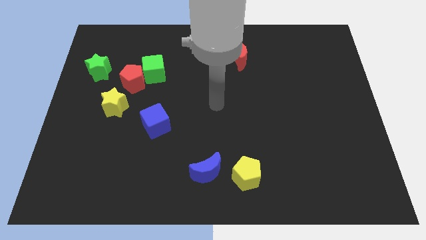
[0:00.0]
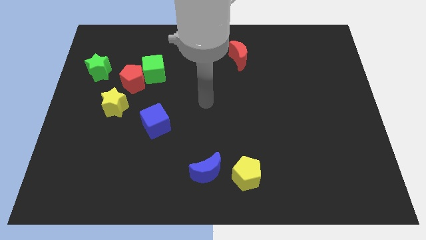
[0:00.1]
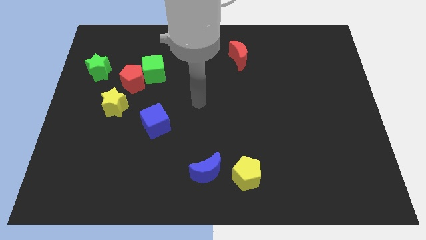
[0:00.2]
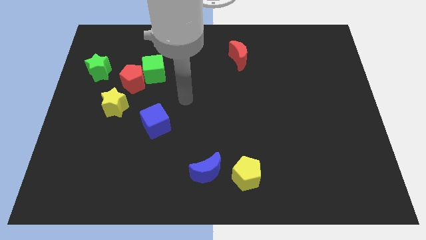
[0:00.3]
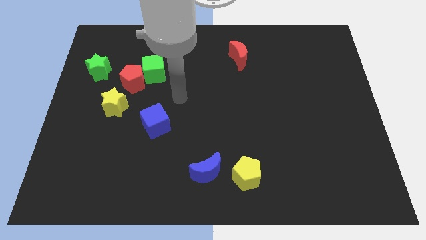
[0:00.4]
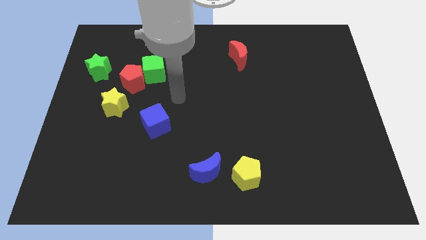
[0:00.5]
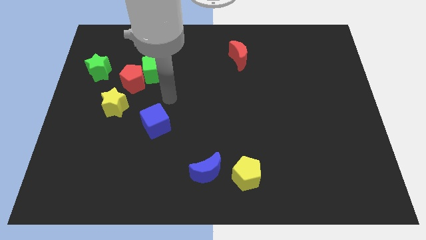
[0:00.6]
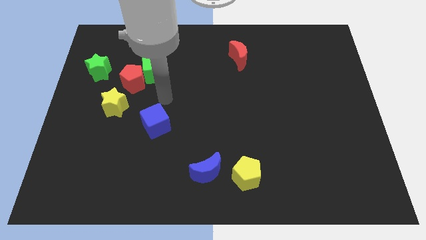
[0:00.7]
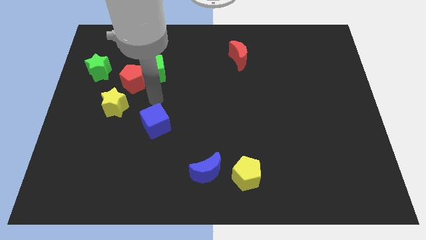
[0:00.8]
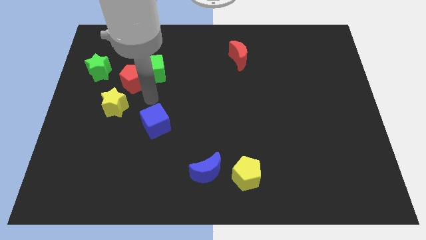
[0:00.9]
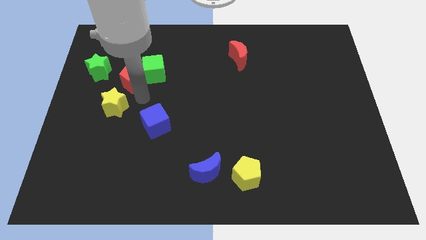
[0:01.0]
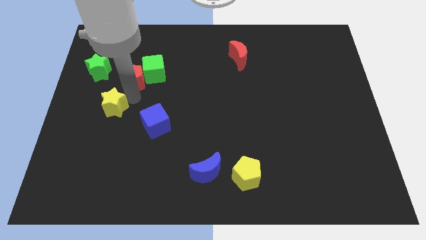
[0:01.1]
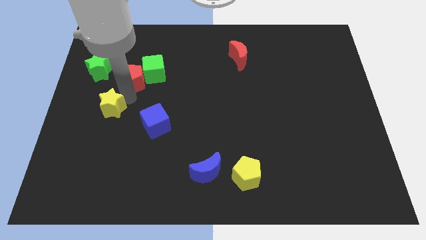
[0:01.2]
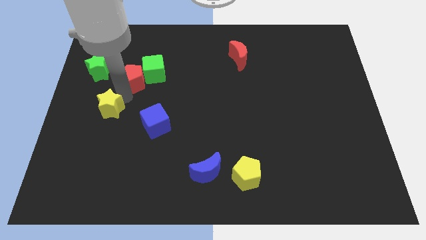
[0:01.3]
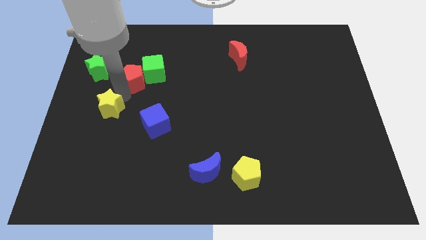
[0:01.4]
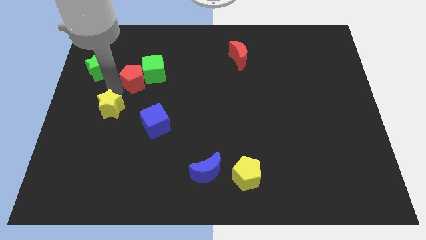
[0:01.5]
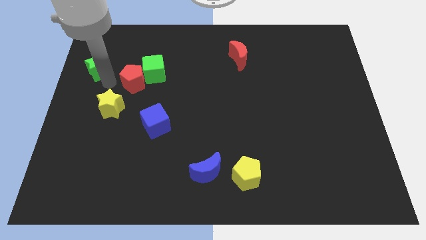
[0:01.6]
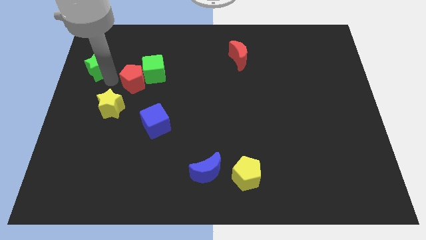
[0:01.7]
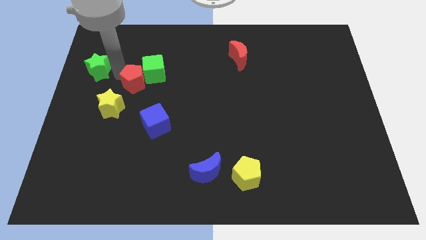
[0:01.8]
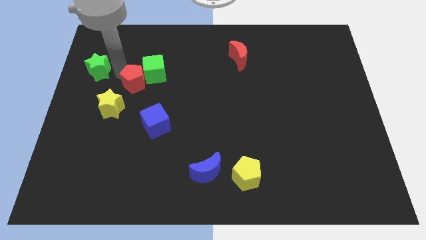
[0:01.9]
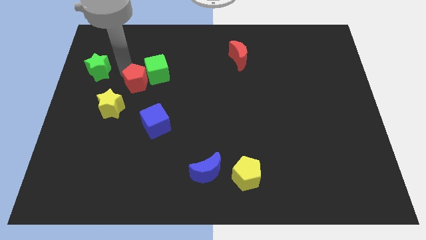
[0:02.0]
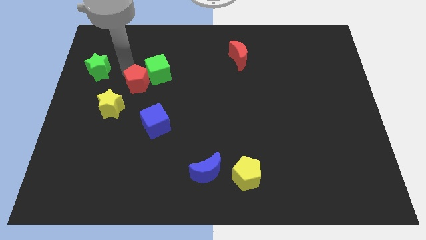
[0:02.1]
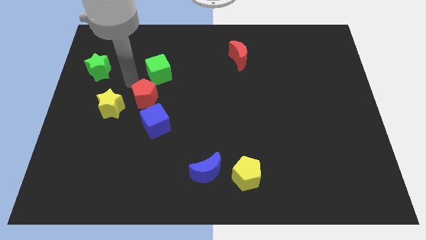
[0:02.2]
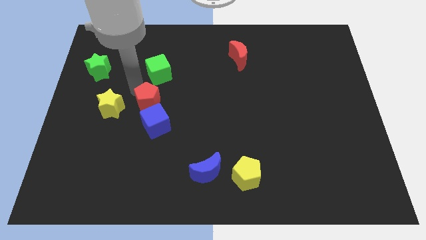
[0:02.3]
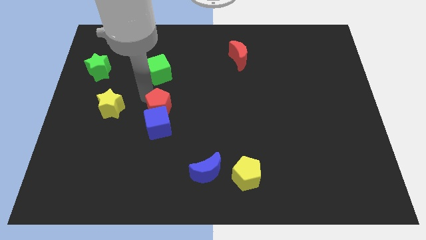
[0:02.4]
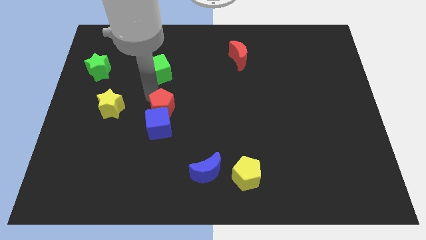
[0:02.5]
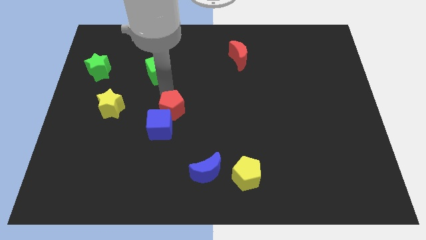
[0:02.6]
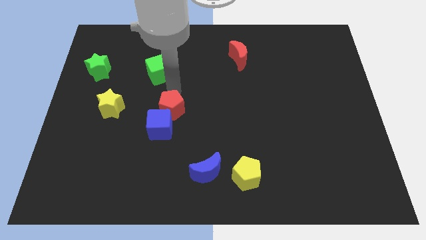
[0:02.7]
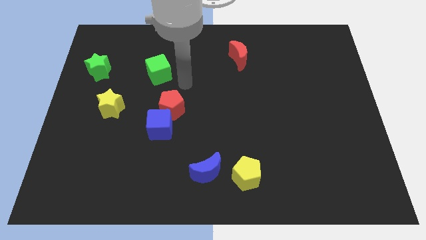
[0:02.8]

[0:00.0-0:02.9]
move the red pentagon right to the yellow star

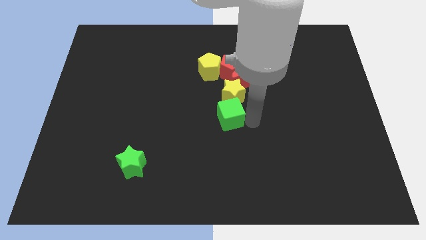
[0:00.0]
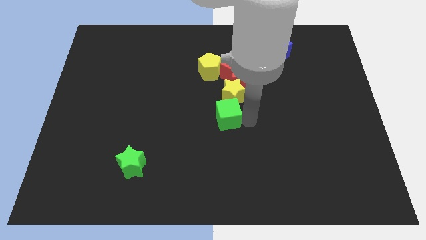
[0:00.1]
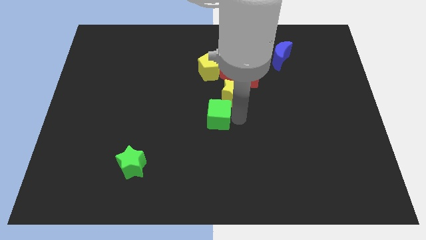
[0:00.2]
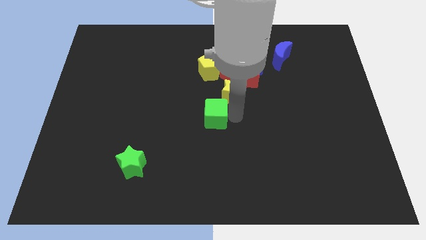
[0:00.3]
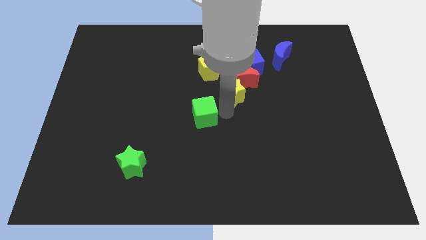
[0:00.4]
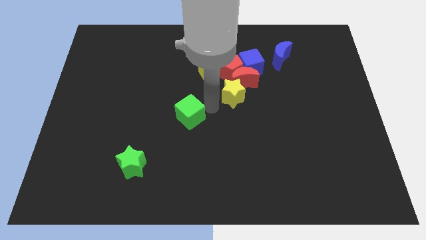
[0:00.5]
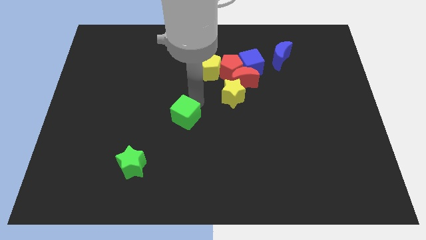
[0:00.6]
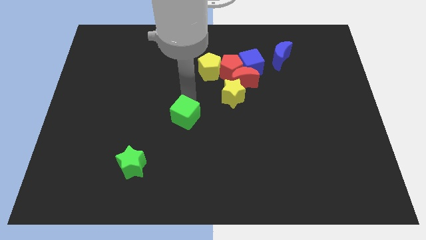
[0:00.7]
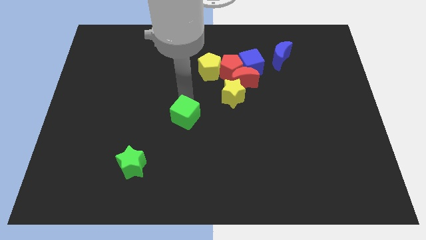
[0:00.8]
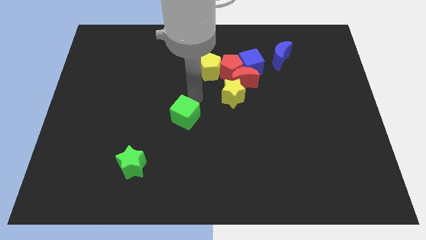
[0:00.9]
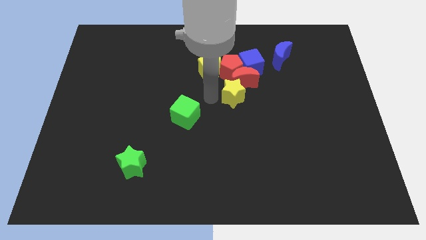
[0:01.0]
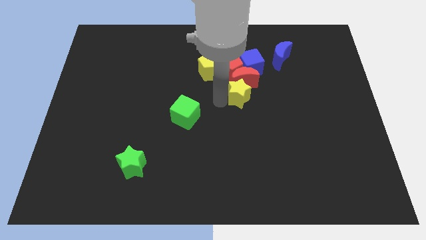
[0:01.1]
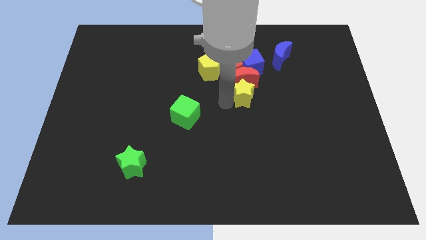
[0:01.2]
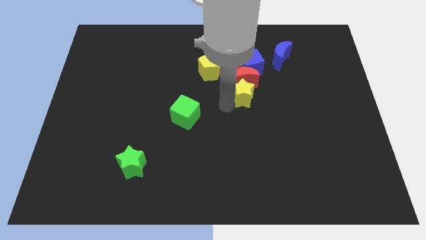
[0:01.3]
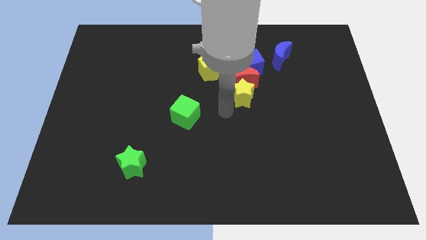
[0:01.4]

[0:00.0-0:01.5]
separate the green cube from the yellow star

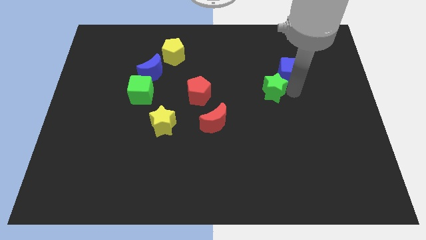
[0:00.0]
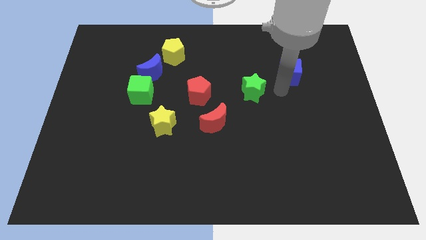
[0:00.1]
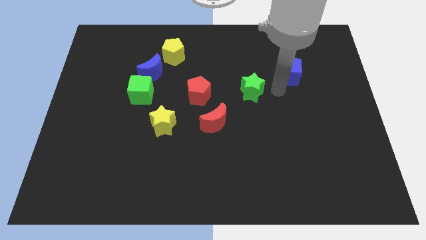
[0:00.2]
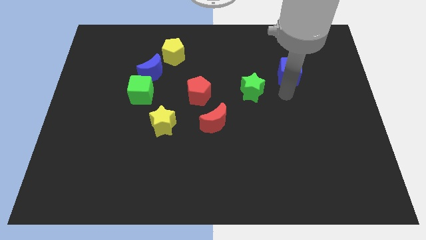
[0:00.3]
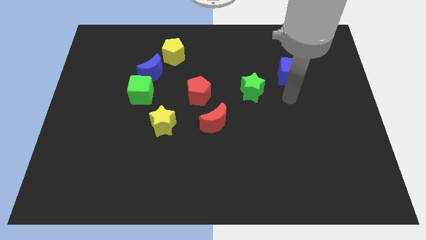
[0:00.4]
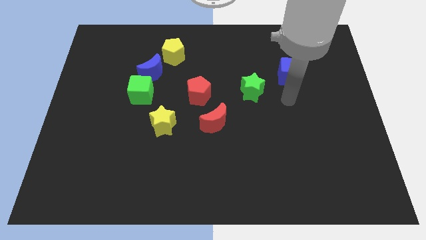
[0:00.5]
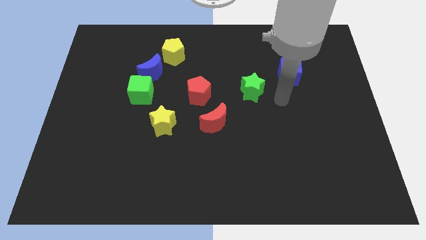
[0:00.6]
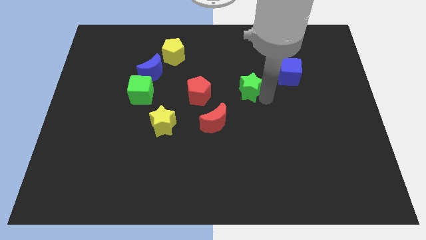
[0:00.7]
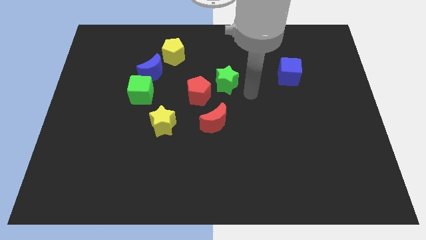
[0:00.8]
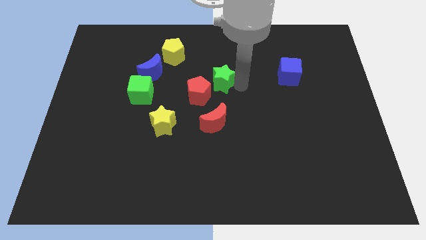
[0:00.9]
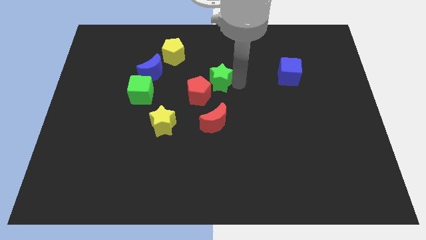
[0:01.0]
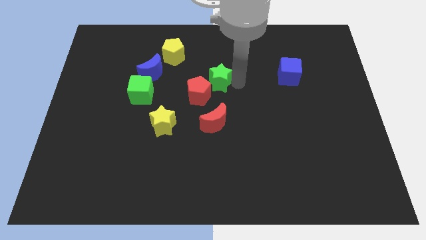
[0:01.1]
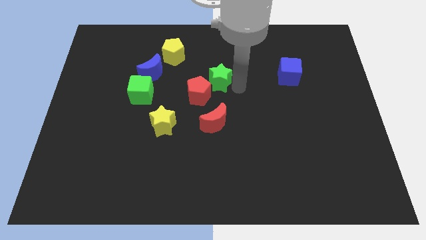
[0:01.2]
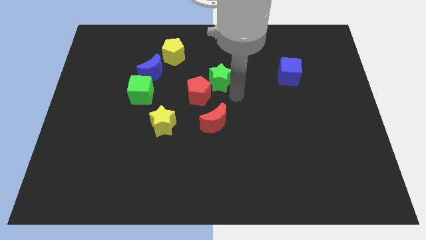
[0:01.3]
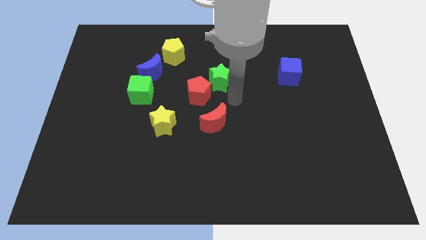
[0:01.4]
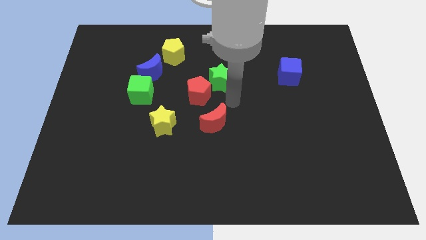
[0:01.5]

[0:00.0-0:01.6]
push the green star near the red pentagon

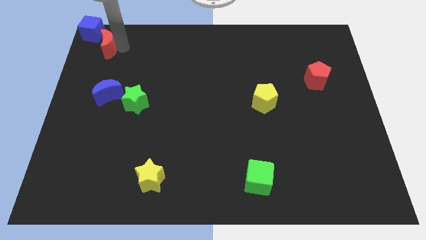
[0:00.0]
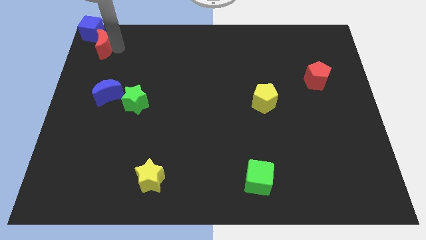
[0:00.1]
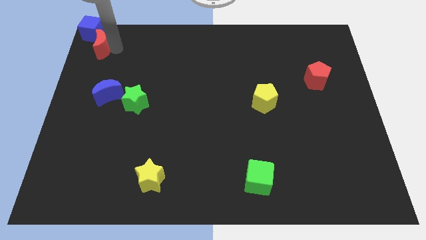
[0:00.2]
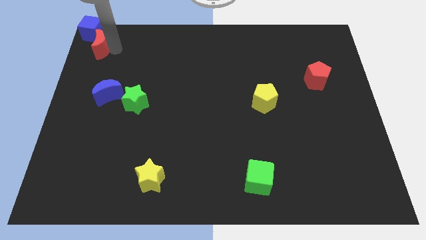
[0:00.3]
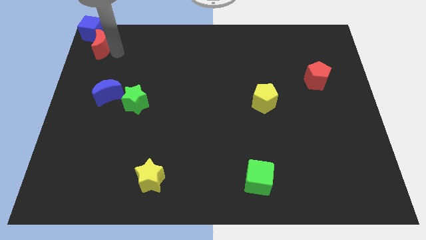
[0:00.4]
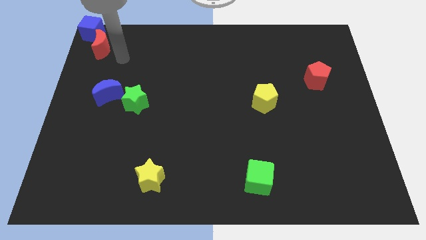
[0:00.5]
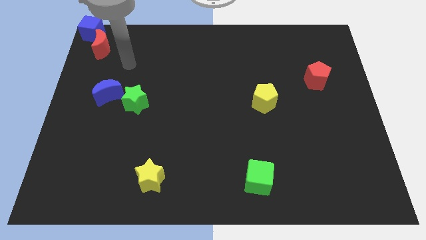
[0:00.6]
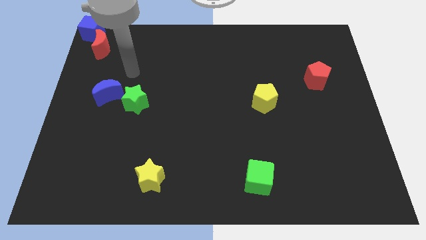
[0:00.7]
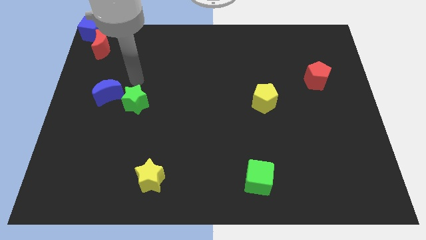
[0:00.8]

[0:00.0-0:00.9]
move the arm towards the green star

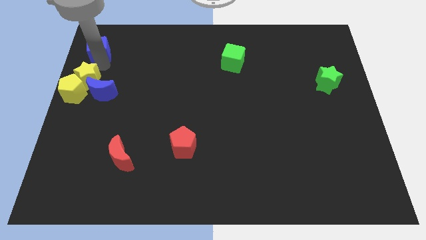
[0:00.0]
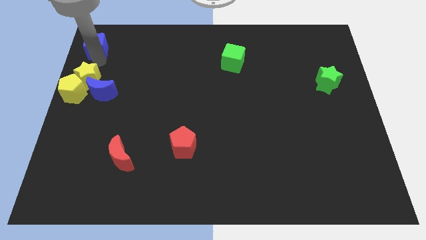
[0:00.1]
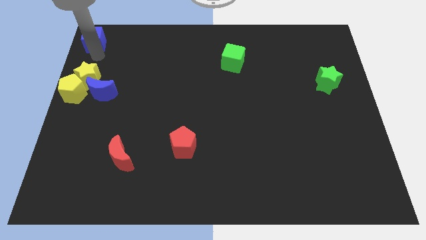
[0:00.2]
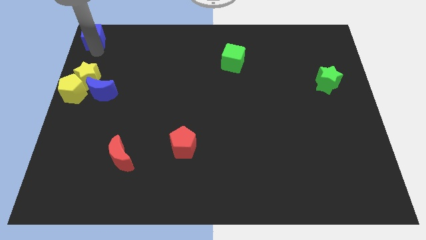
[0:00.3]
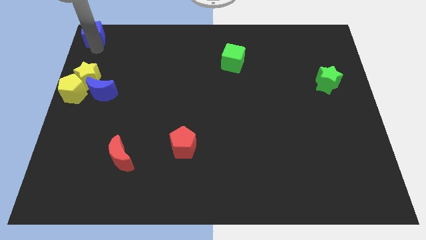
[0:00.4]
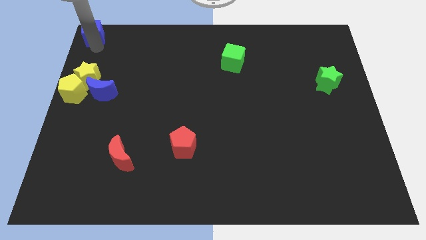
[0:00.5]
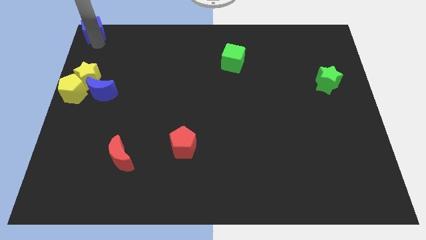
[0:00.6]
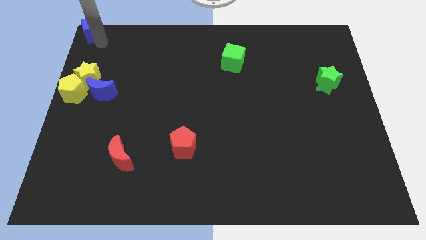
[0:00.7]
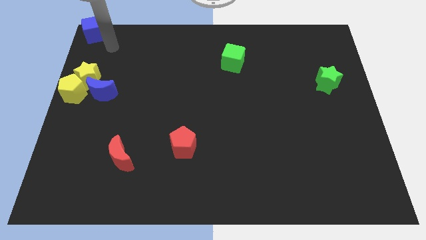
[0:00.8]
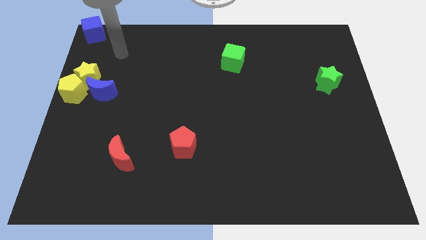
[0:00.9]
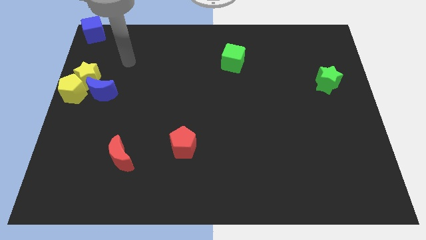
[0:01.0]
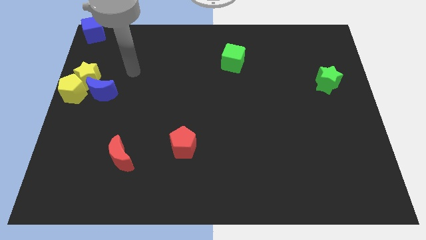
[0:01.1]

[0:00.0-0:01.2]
place blue cube vertically above yellow star

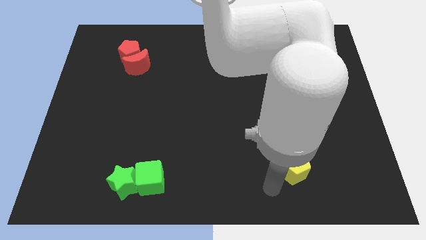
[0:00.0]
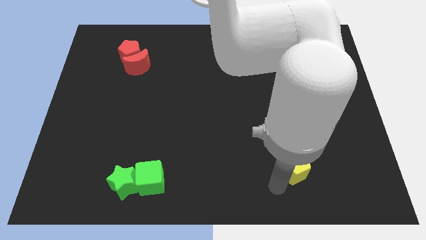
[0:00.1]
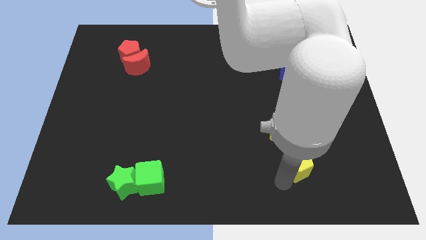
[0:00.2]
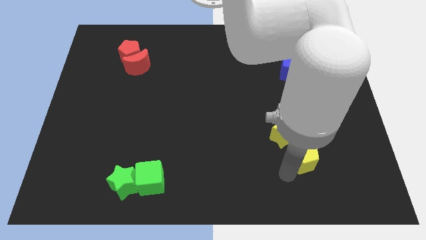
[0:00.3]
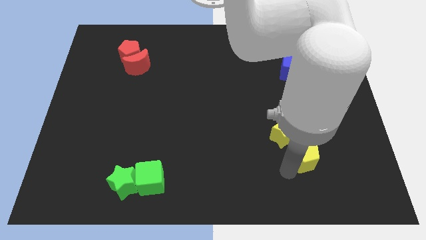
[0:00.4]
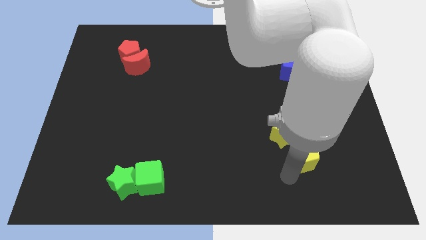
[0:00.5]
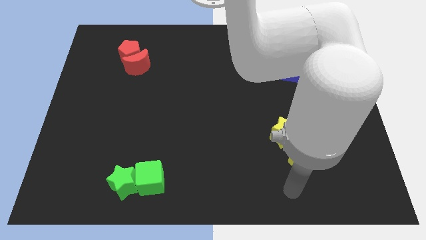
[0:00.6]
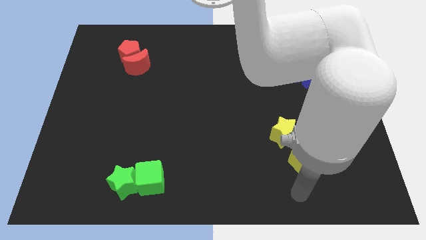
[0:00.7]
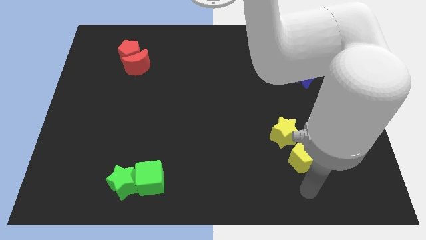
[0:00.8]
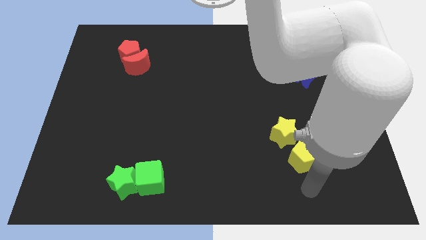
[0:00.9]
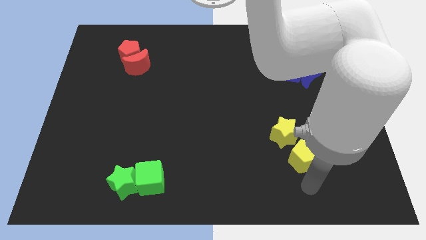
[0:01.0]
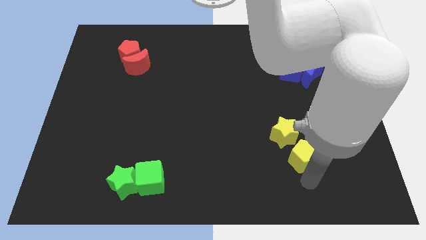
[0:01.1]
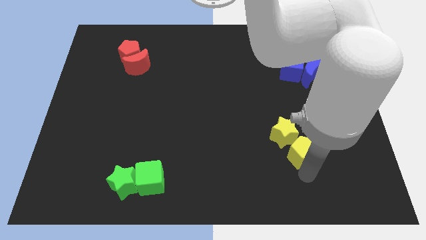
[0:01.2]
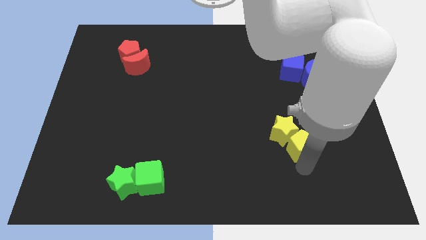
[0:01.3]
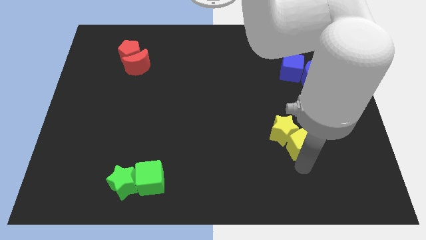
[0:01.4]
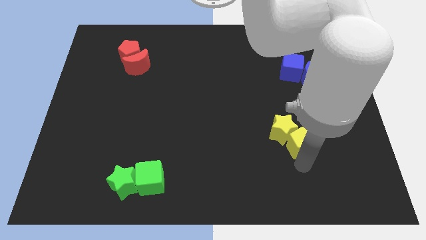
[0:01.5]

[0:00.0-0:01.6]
push the yellow pentagon into the yellow star
